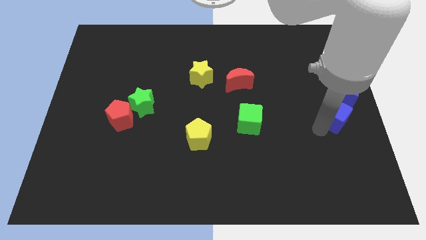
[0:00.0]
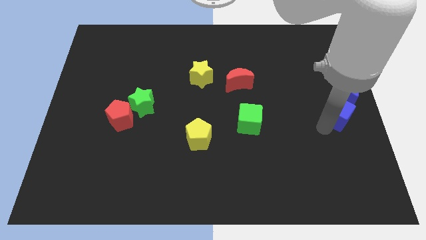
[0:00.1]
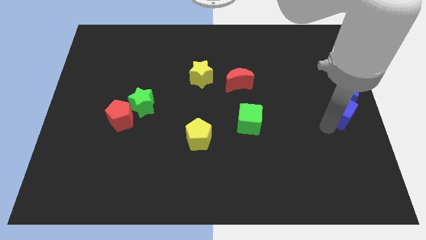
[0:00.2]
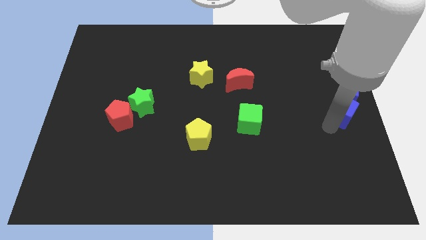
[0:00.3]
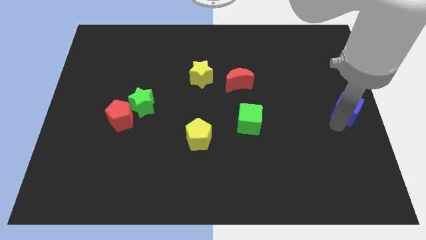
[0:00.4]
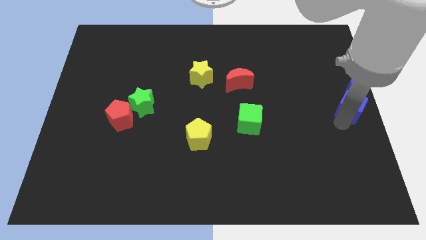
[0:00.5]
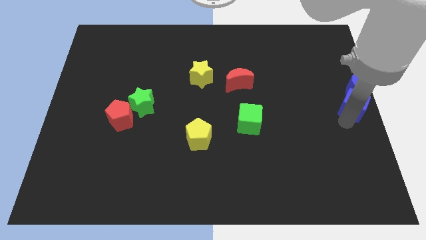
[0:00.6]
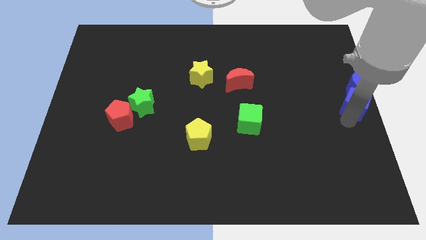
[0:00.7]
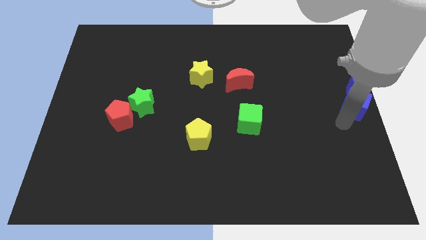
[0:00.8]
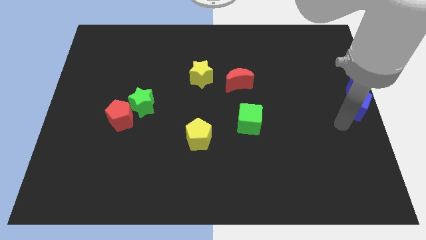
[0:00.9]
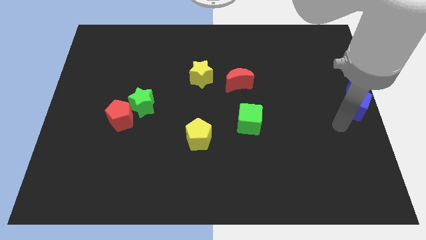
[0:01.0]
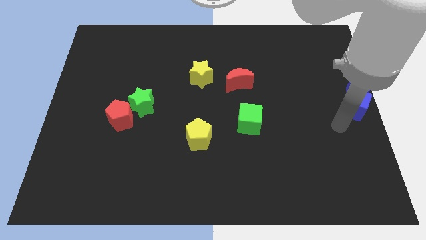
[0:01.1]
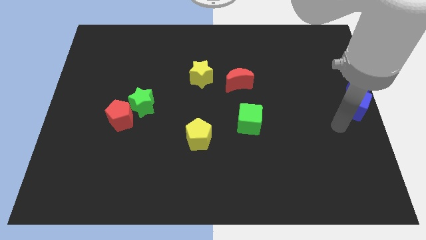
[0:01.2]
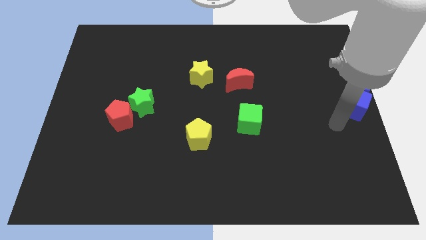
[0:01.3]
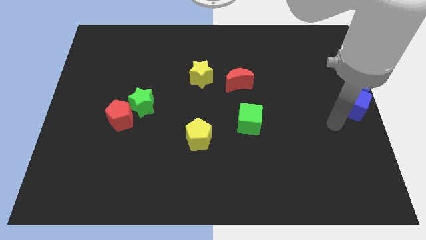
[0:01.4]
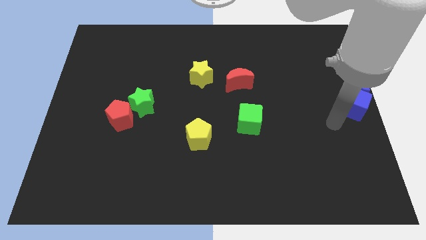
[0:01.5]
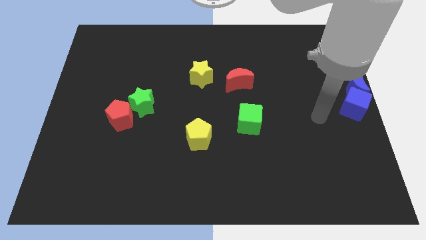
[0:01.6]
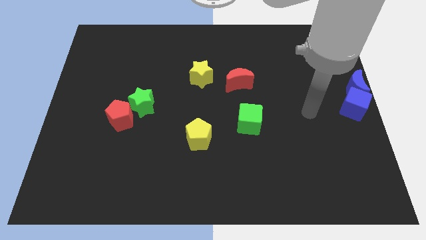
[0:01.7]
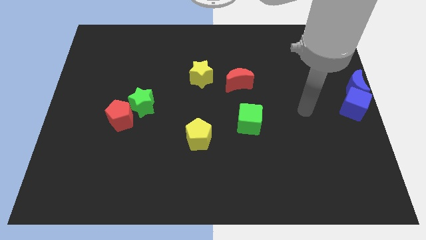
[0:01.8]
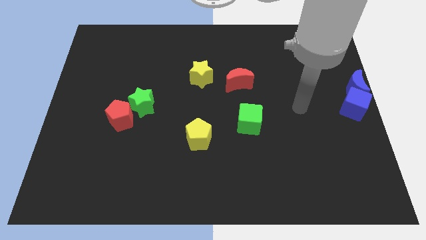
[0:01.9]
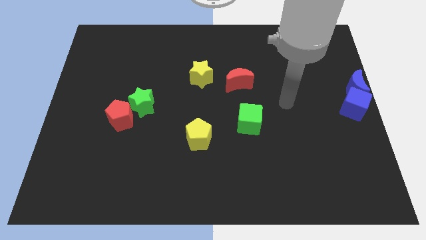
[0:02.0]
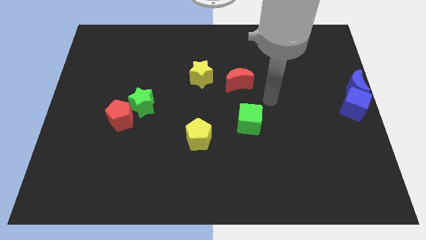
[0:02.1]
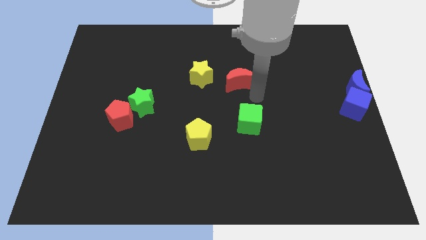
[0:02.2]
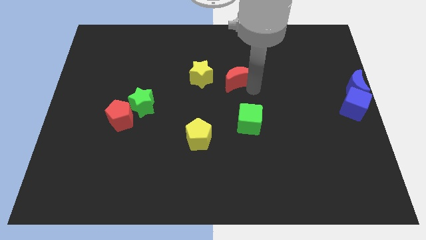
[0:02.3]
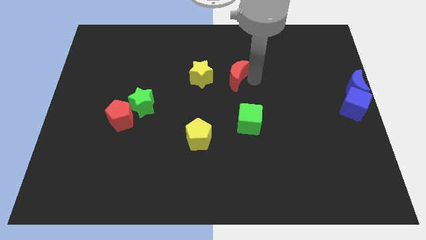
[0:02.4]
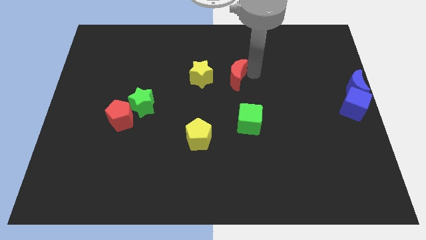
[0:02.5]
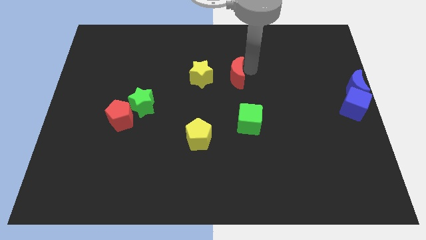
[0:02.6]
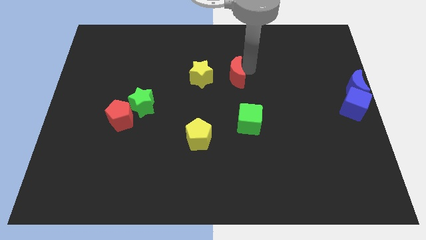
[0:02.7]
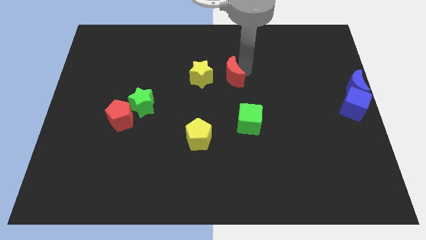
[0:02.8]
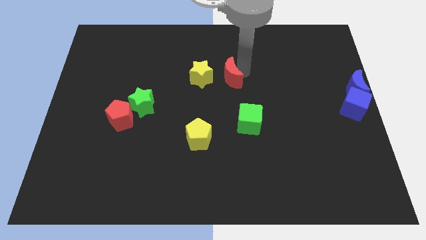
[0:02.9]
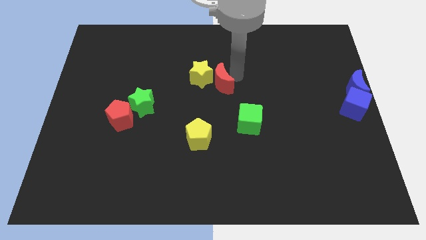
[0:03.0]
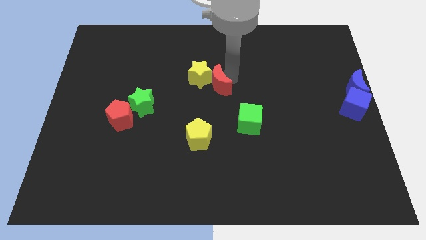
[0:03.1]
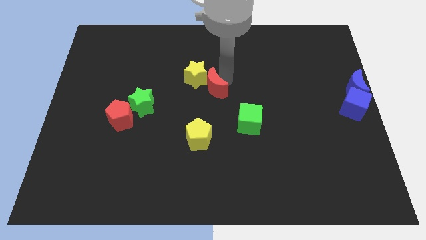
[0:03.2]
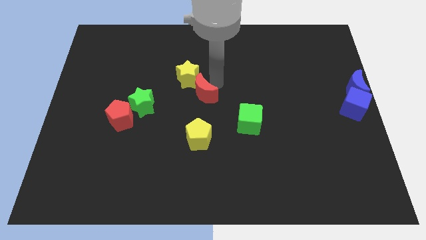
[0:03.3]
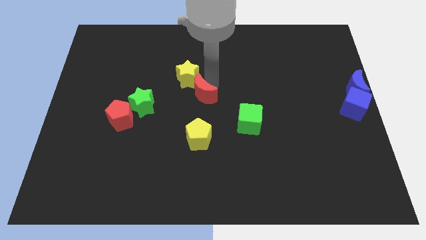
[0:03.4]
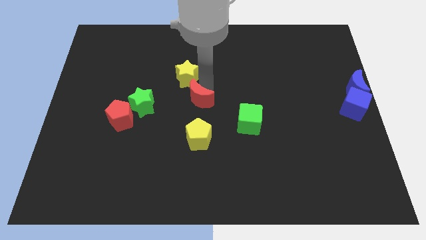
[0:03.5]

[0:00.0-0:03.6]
move red moon below yellow star

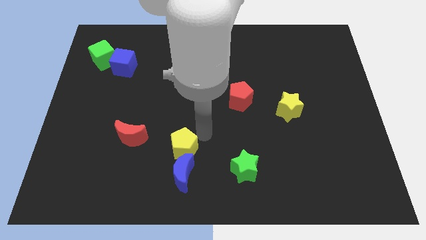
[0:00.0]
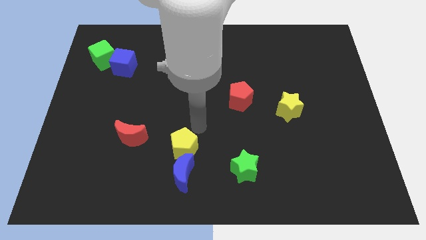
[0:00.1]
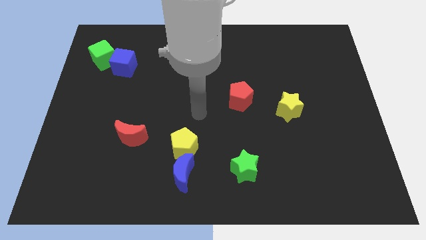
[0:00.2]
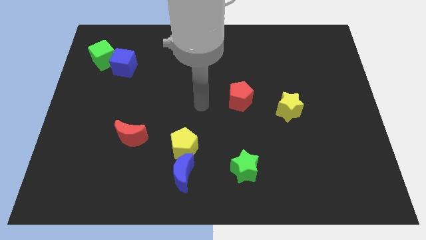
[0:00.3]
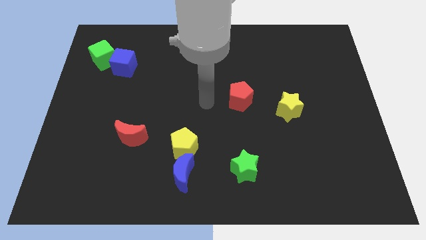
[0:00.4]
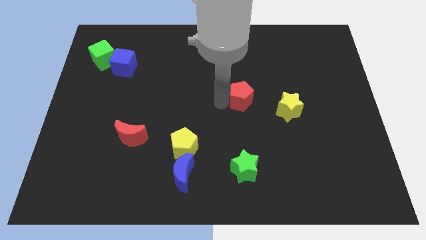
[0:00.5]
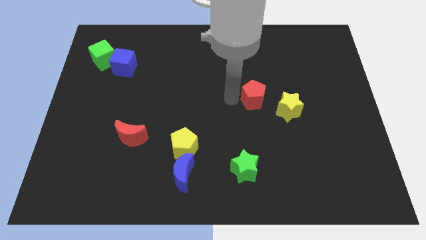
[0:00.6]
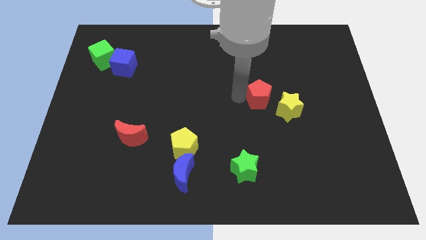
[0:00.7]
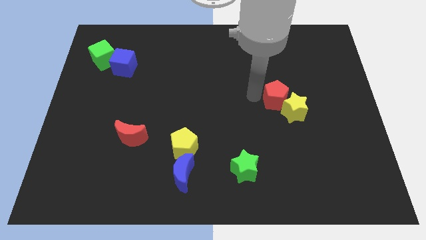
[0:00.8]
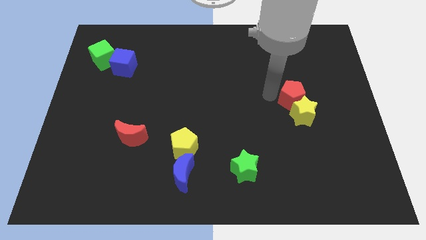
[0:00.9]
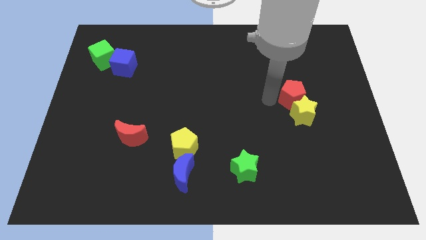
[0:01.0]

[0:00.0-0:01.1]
move red pentagon into yellow star

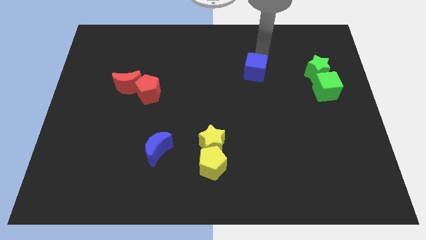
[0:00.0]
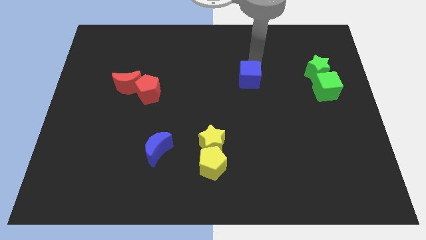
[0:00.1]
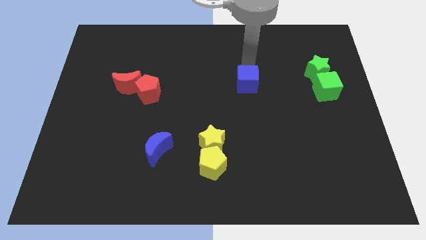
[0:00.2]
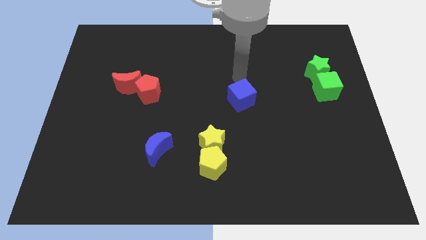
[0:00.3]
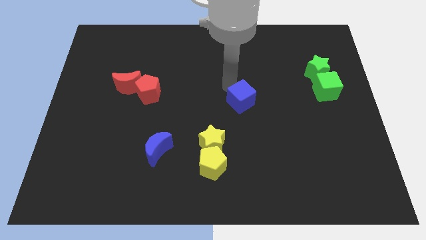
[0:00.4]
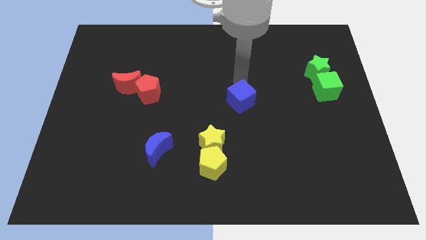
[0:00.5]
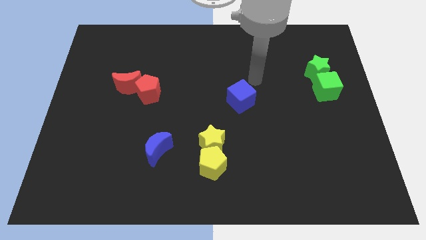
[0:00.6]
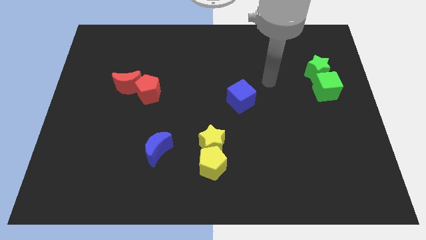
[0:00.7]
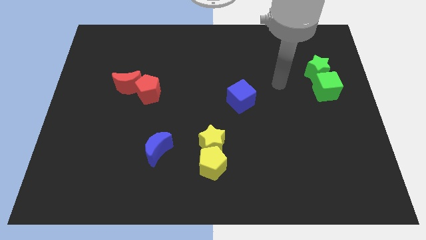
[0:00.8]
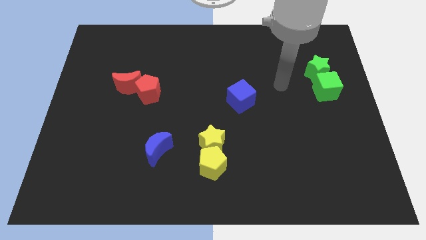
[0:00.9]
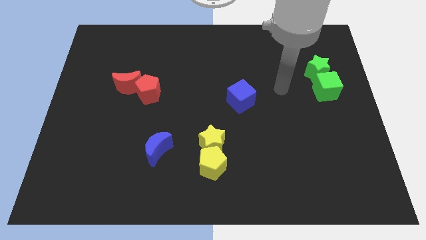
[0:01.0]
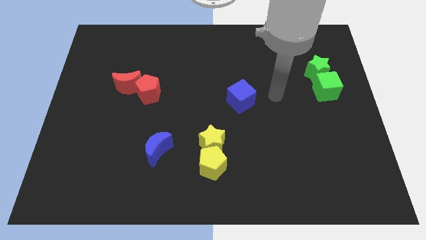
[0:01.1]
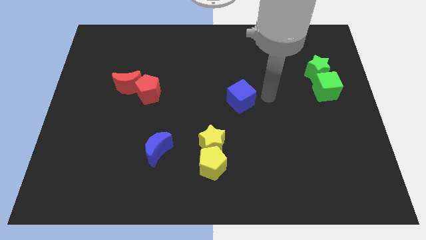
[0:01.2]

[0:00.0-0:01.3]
push blue cube to the center

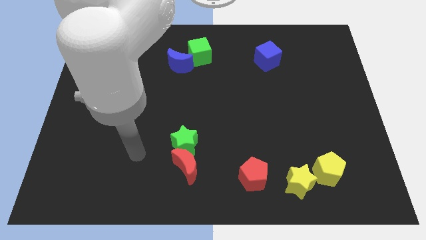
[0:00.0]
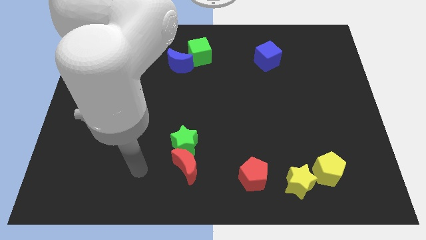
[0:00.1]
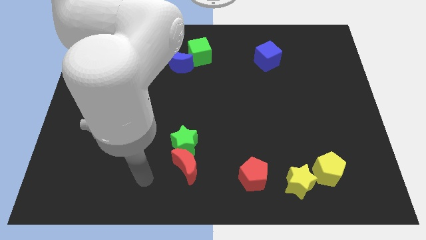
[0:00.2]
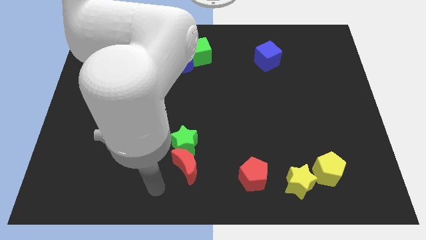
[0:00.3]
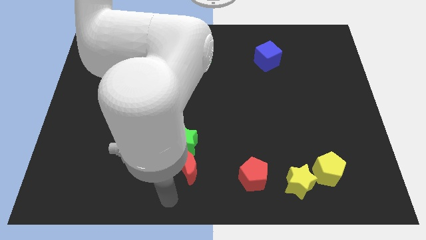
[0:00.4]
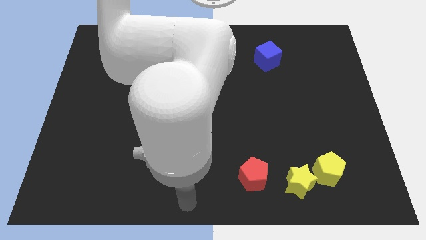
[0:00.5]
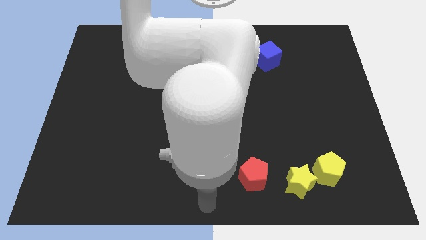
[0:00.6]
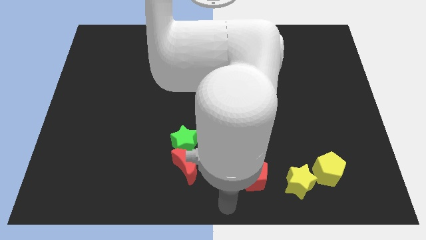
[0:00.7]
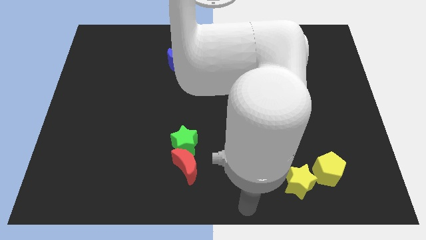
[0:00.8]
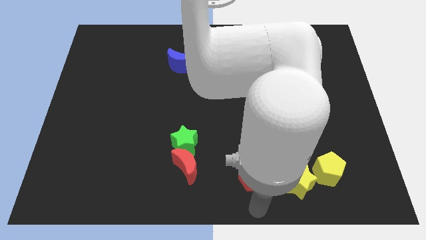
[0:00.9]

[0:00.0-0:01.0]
move your arm to the bottom of the red pentagon

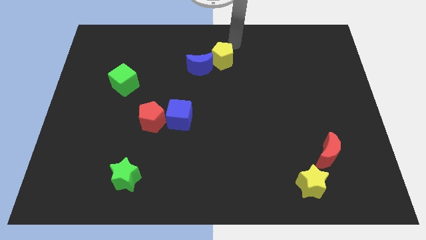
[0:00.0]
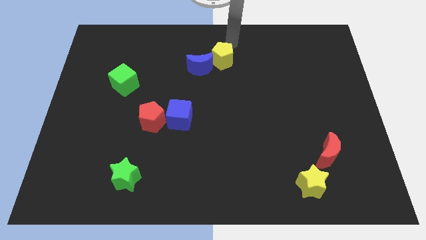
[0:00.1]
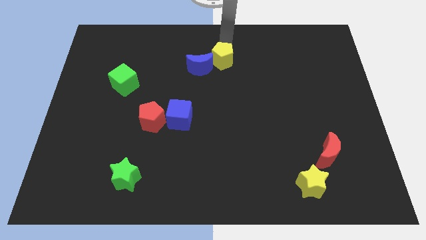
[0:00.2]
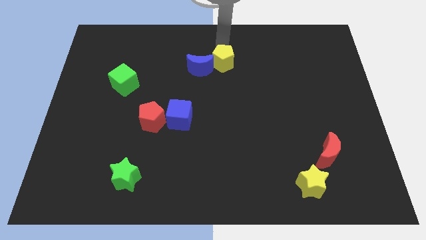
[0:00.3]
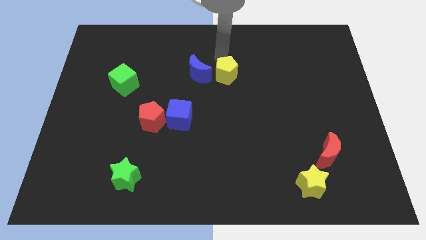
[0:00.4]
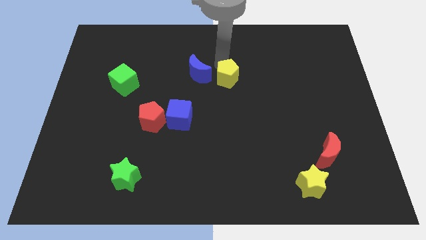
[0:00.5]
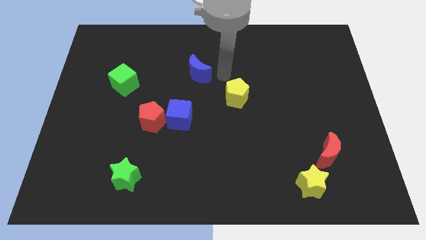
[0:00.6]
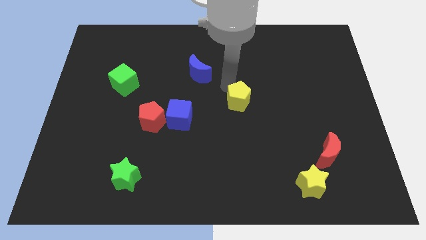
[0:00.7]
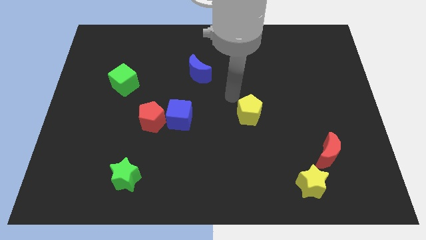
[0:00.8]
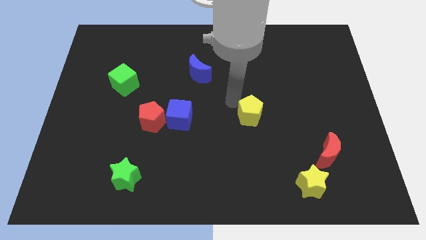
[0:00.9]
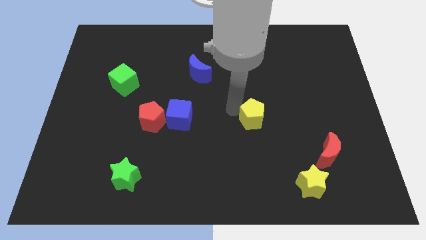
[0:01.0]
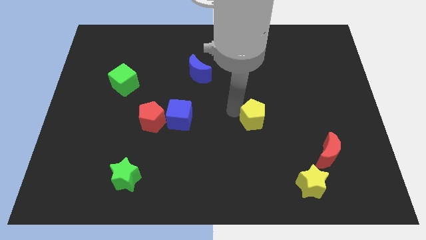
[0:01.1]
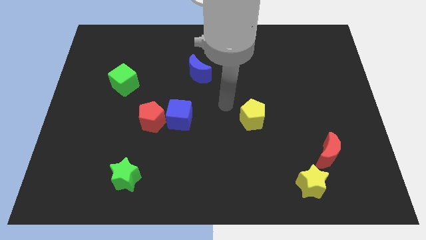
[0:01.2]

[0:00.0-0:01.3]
push the yellow pentagon towards the center of the board

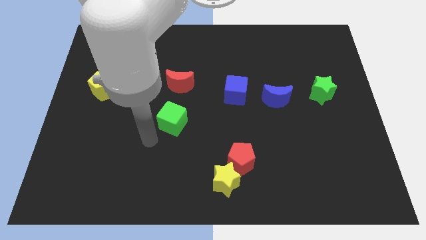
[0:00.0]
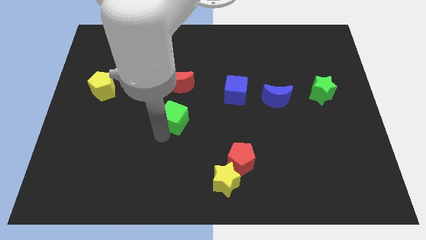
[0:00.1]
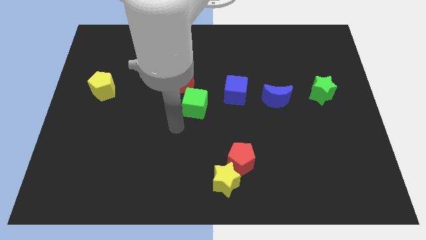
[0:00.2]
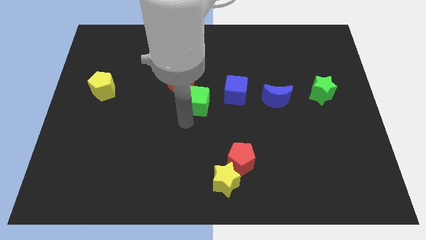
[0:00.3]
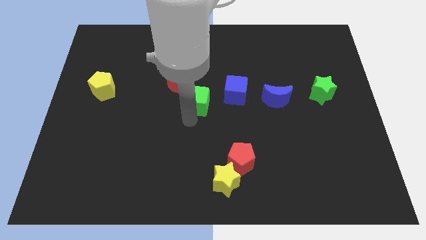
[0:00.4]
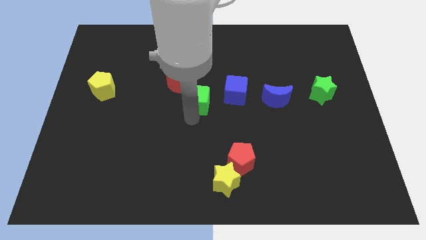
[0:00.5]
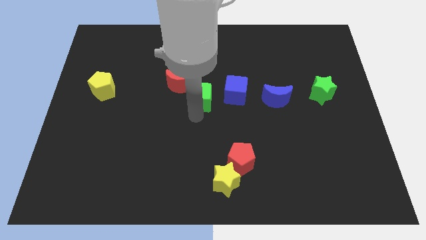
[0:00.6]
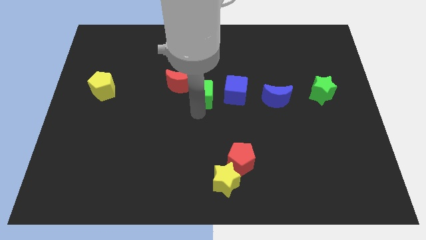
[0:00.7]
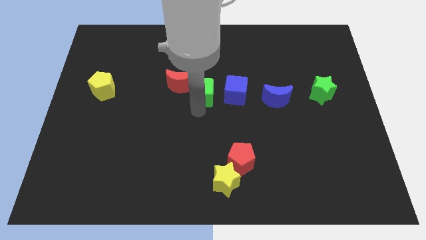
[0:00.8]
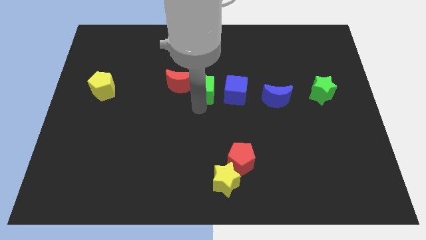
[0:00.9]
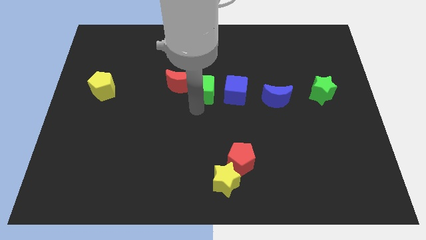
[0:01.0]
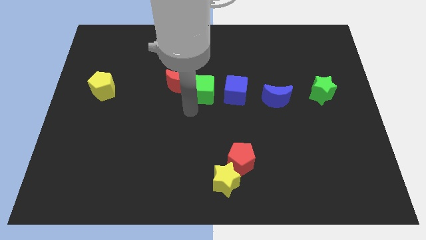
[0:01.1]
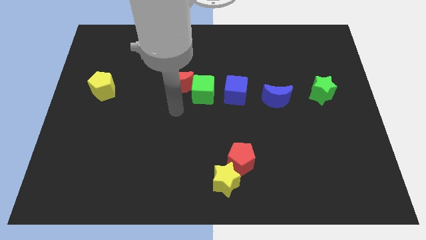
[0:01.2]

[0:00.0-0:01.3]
place the green cube to the left side of the blue cube
